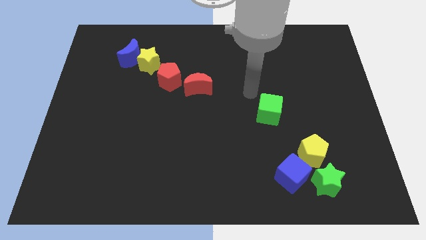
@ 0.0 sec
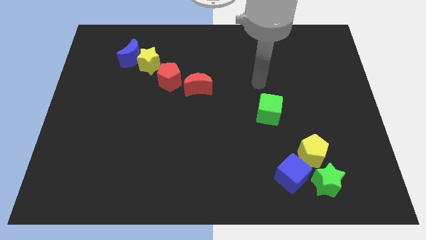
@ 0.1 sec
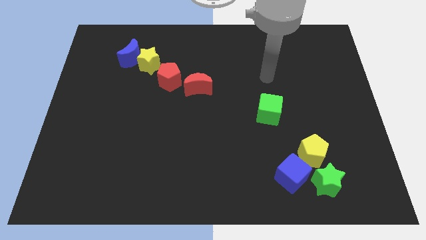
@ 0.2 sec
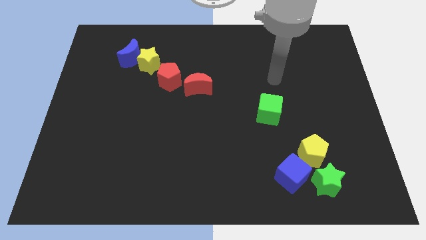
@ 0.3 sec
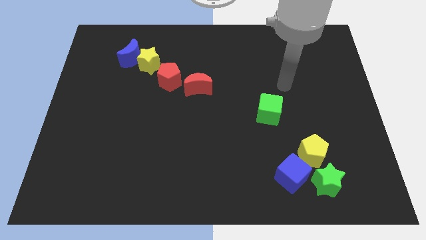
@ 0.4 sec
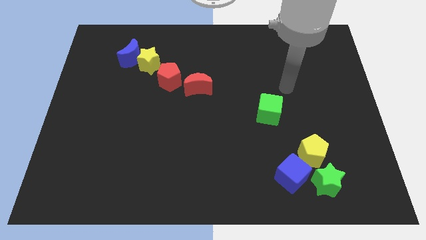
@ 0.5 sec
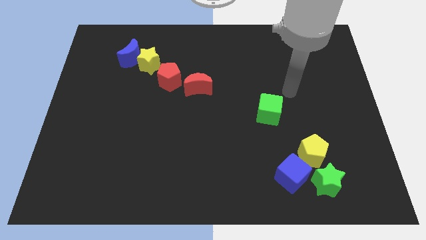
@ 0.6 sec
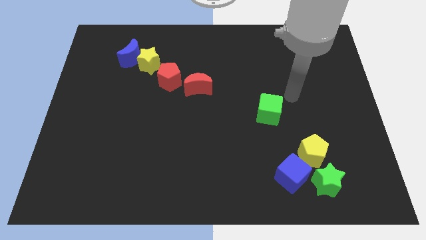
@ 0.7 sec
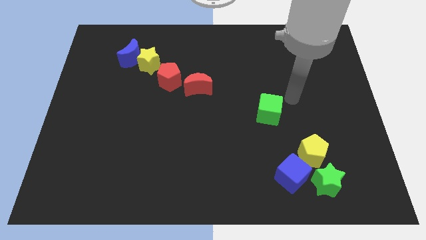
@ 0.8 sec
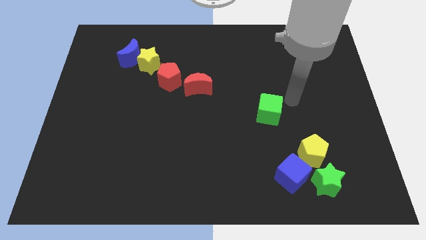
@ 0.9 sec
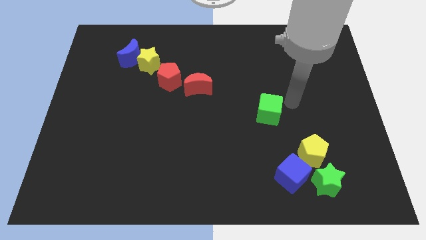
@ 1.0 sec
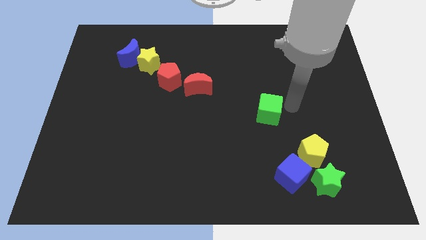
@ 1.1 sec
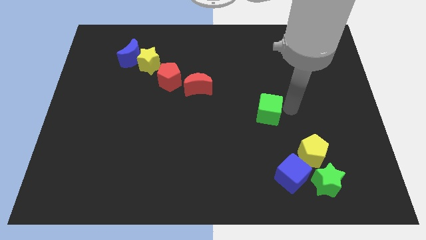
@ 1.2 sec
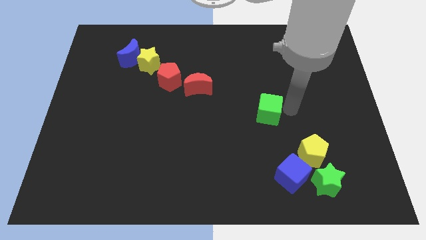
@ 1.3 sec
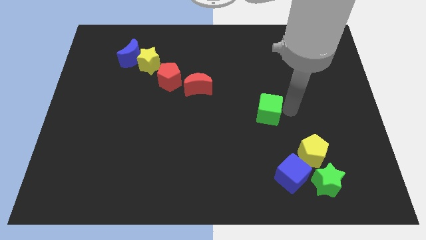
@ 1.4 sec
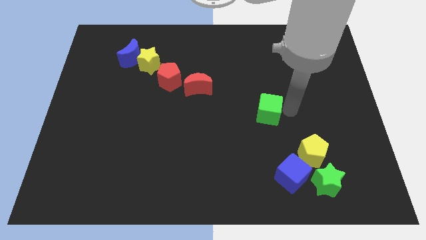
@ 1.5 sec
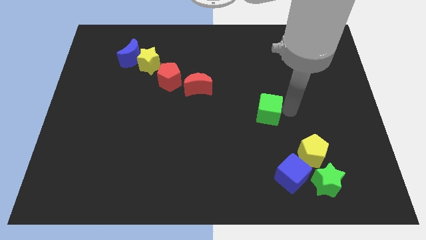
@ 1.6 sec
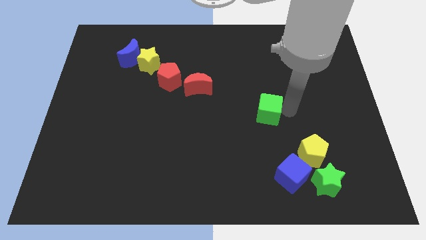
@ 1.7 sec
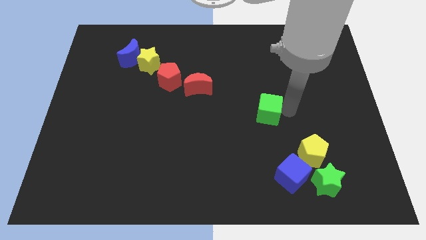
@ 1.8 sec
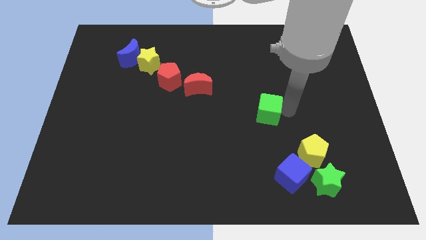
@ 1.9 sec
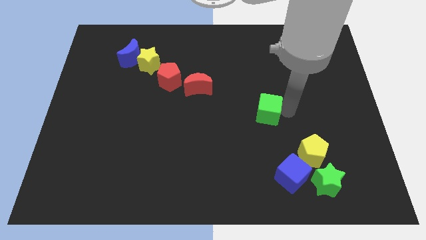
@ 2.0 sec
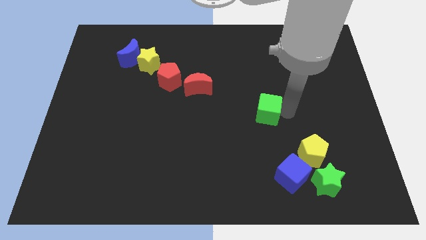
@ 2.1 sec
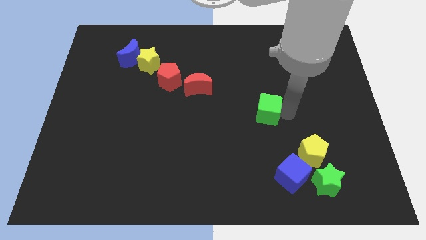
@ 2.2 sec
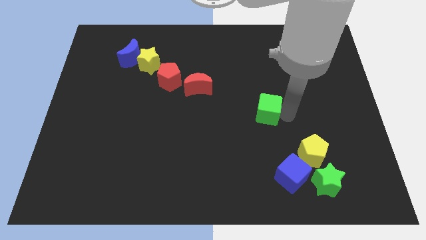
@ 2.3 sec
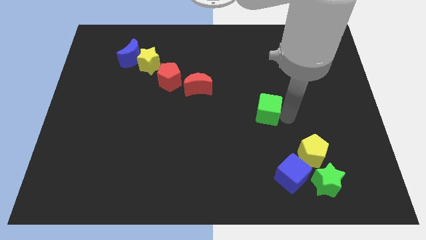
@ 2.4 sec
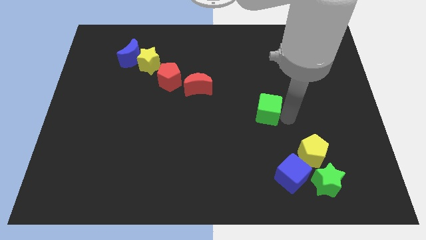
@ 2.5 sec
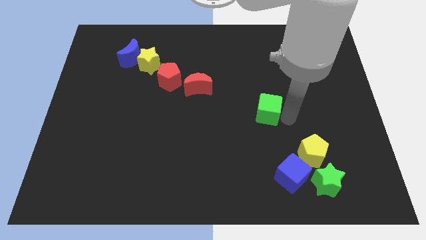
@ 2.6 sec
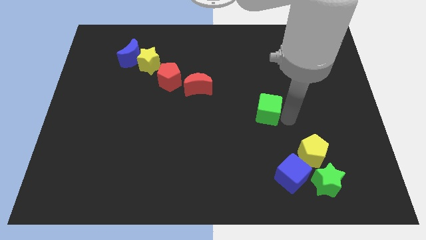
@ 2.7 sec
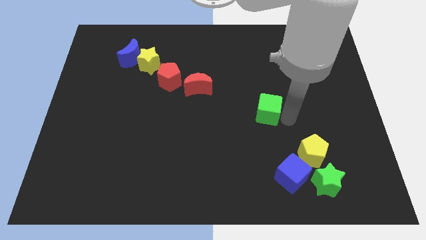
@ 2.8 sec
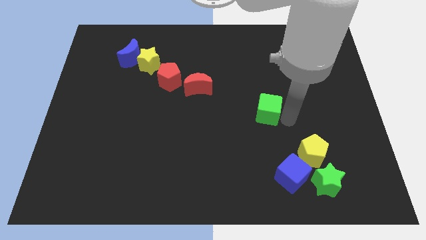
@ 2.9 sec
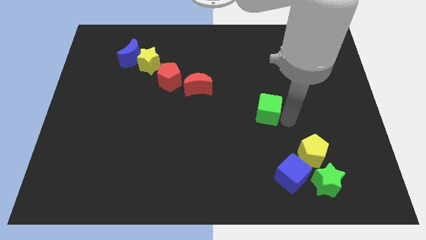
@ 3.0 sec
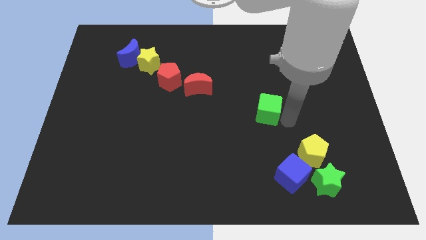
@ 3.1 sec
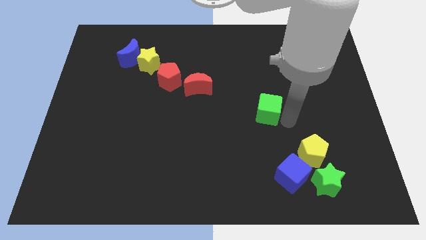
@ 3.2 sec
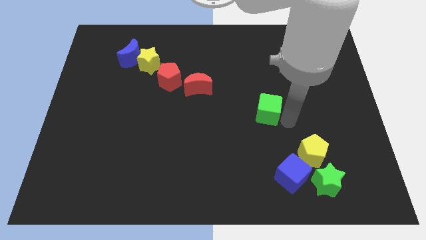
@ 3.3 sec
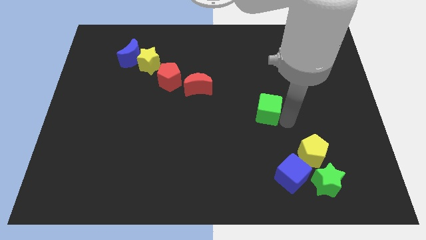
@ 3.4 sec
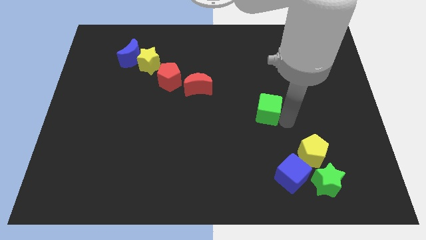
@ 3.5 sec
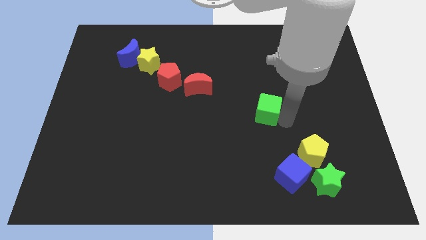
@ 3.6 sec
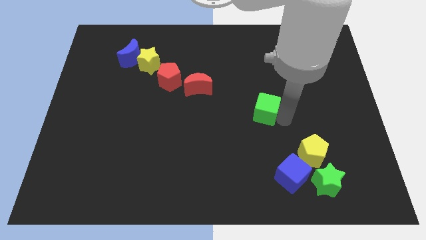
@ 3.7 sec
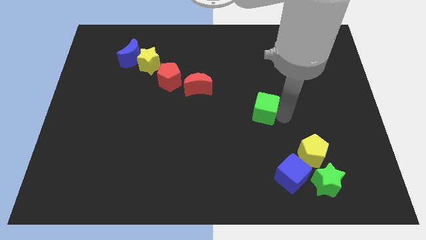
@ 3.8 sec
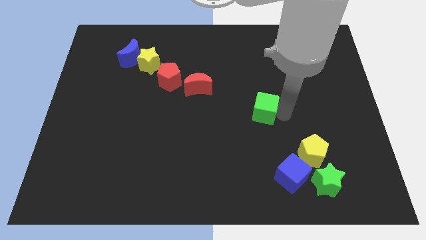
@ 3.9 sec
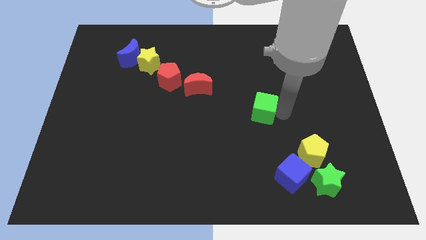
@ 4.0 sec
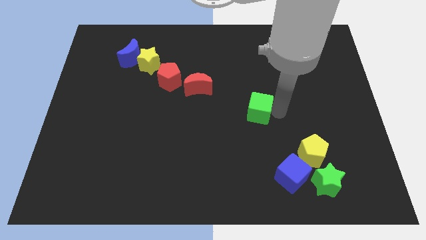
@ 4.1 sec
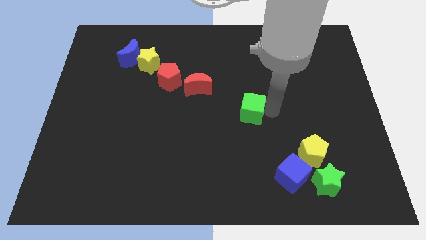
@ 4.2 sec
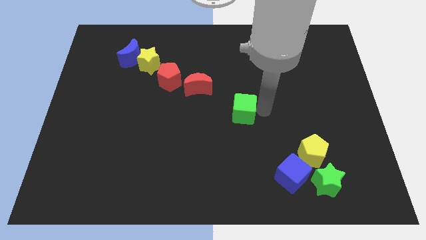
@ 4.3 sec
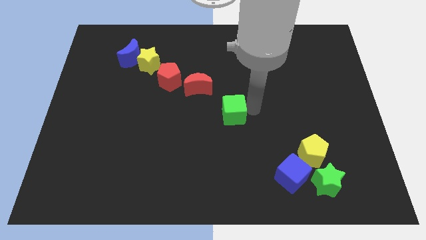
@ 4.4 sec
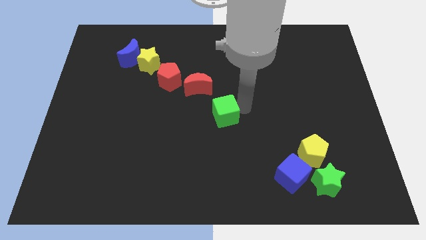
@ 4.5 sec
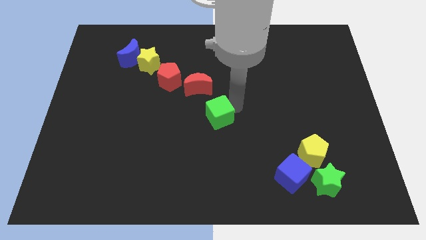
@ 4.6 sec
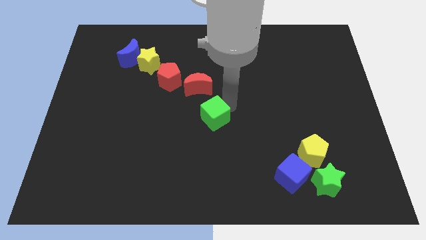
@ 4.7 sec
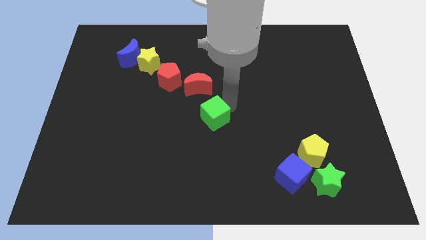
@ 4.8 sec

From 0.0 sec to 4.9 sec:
push the green star to the center of the board

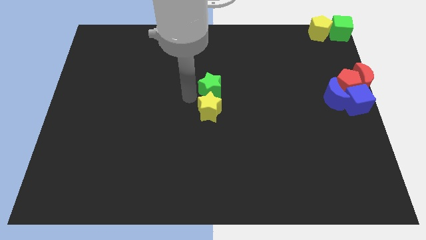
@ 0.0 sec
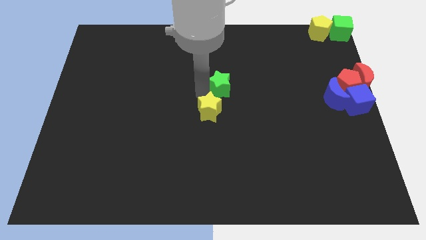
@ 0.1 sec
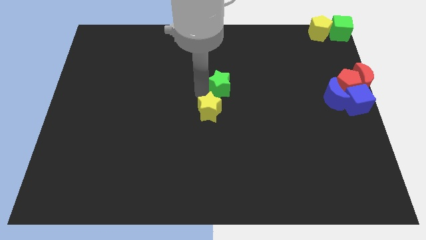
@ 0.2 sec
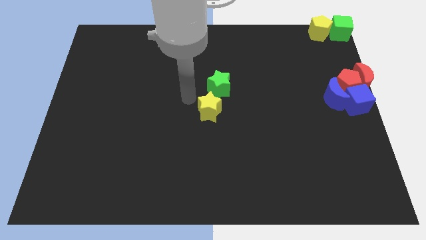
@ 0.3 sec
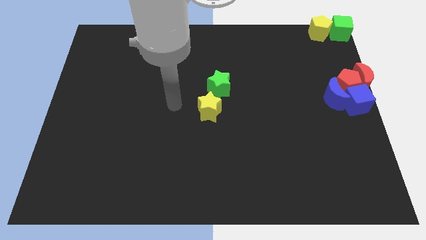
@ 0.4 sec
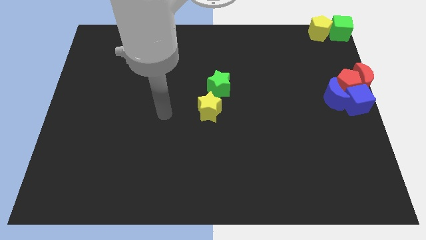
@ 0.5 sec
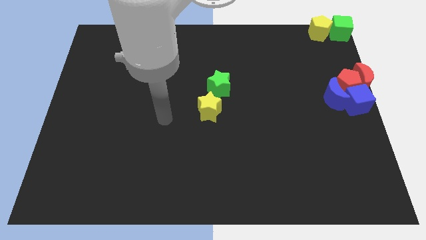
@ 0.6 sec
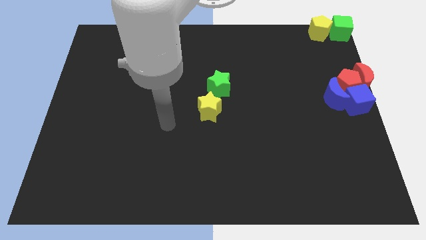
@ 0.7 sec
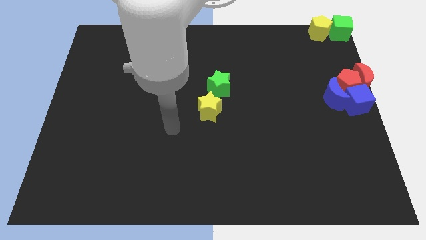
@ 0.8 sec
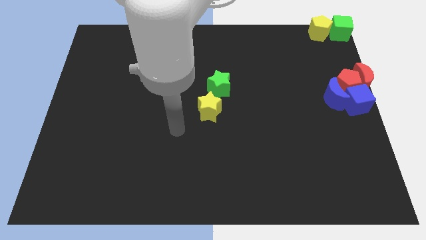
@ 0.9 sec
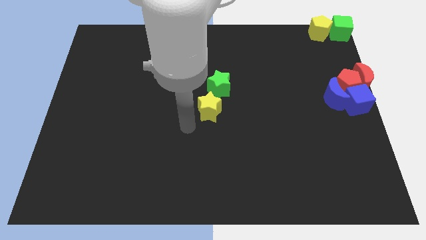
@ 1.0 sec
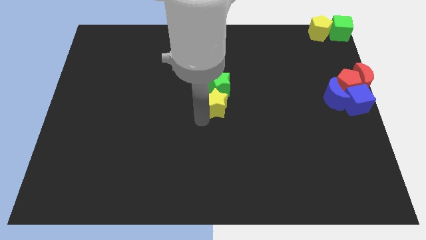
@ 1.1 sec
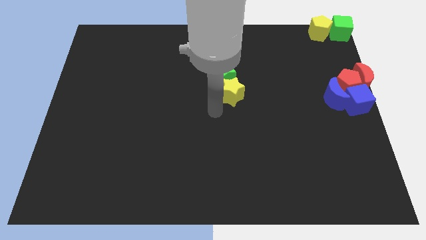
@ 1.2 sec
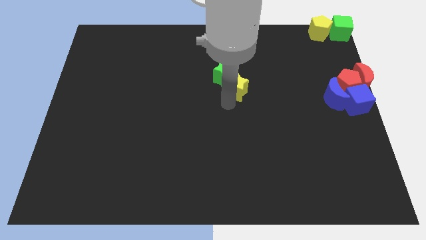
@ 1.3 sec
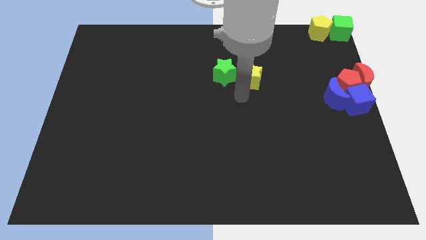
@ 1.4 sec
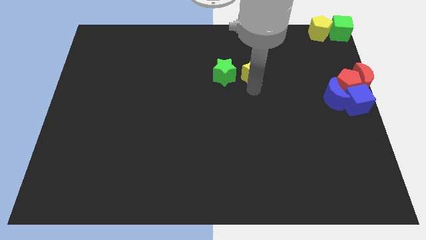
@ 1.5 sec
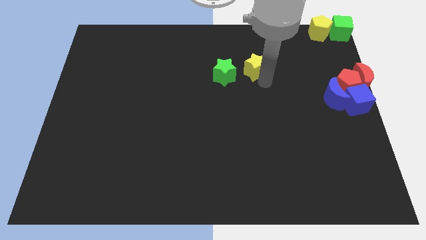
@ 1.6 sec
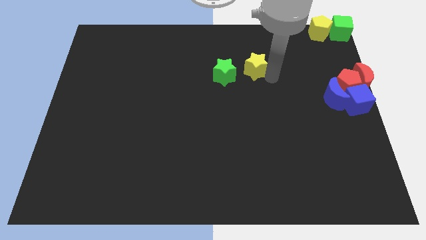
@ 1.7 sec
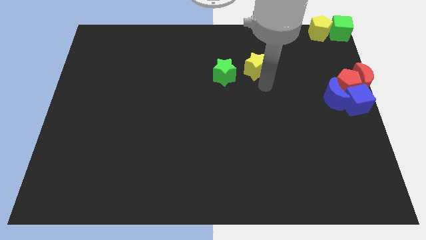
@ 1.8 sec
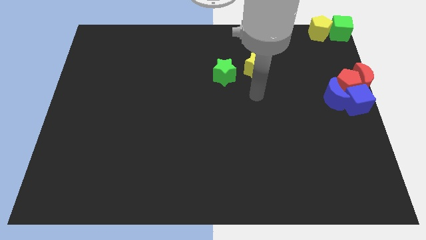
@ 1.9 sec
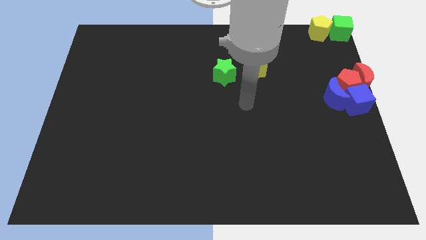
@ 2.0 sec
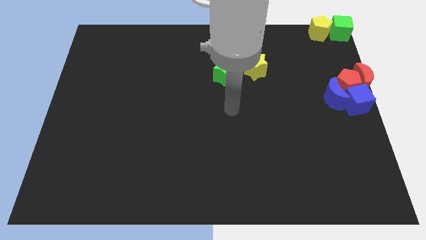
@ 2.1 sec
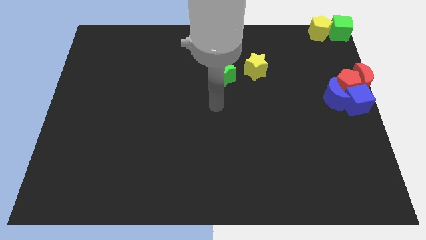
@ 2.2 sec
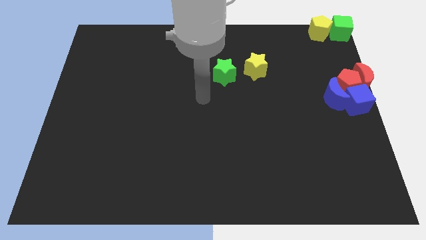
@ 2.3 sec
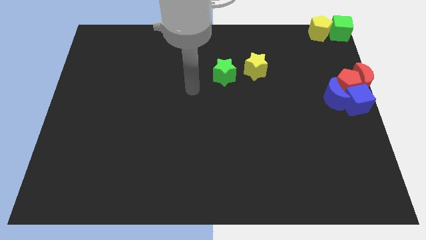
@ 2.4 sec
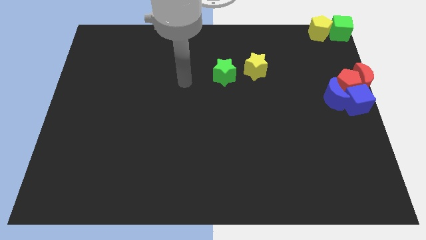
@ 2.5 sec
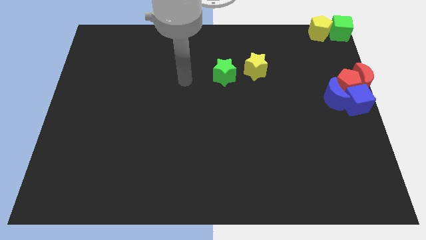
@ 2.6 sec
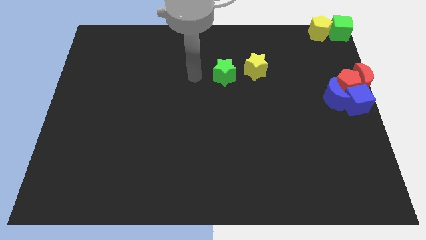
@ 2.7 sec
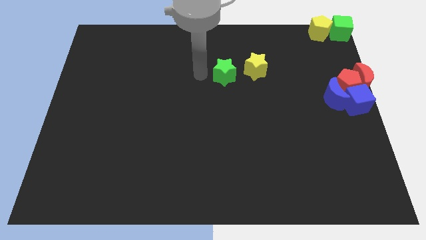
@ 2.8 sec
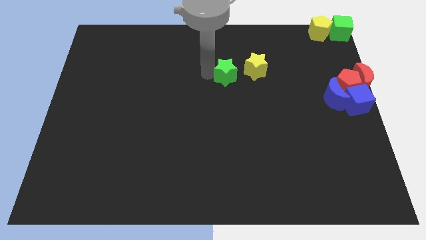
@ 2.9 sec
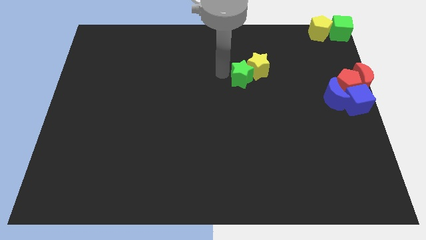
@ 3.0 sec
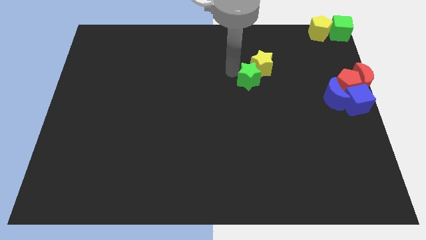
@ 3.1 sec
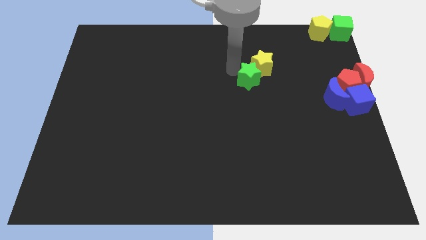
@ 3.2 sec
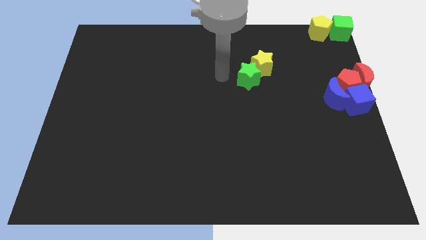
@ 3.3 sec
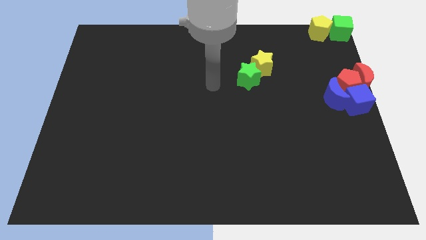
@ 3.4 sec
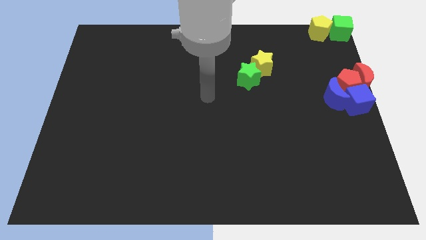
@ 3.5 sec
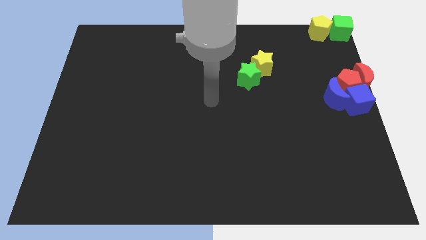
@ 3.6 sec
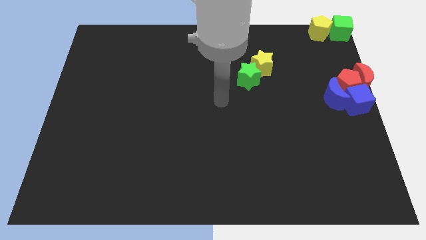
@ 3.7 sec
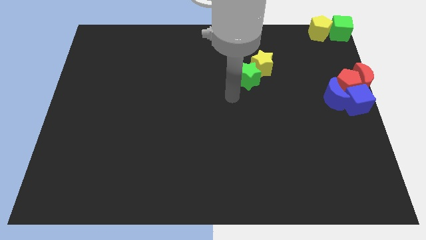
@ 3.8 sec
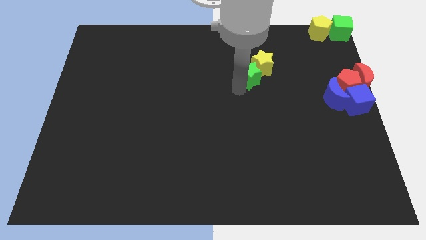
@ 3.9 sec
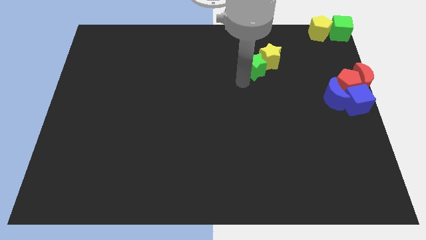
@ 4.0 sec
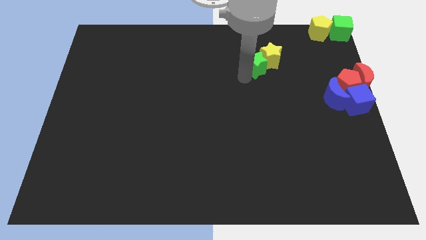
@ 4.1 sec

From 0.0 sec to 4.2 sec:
push the green and yellow star to the top right
